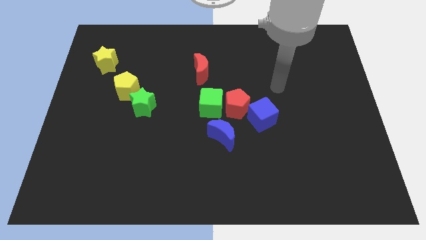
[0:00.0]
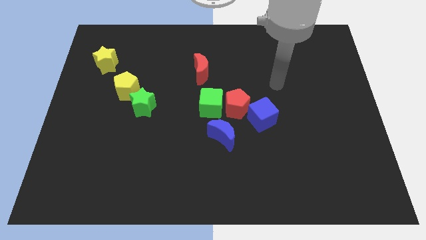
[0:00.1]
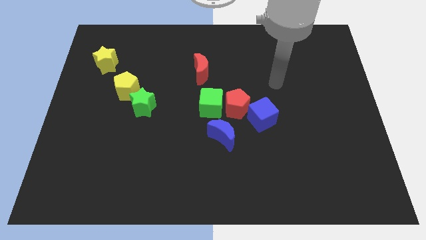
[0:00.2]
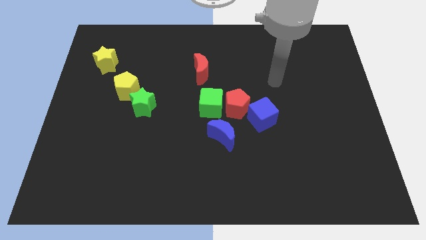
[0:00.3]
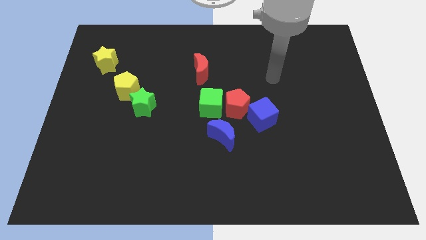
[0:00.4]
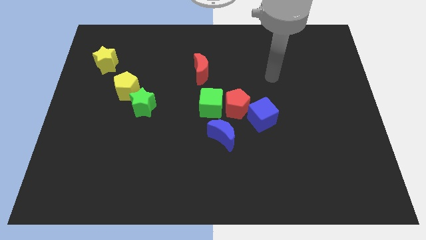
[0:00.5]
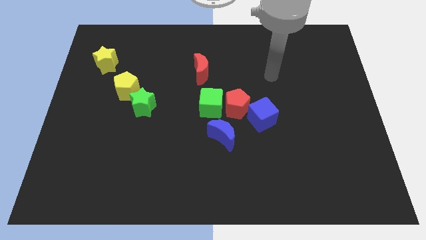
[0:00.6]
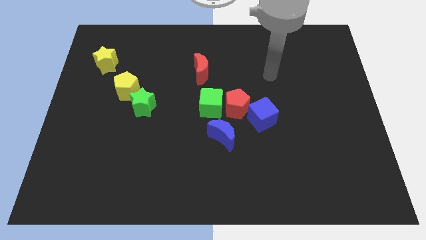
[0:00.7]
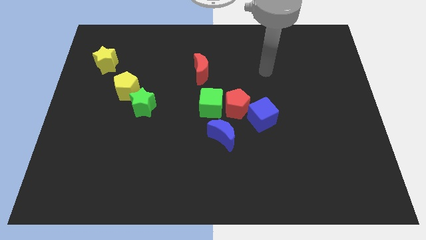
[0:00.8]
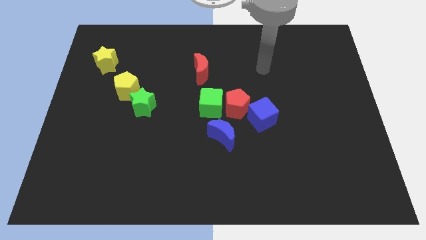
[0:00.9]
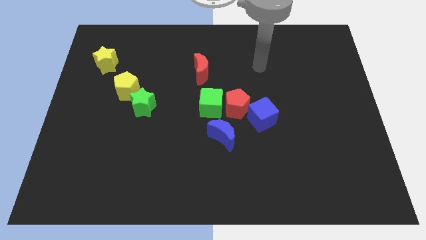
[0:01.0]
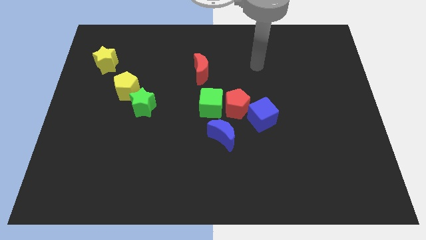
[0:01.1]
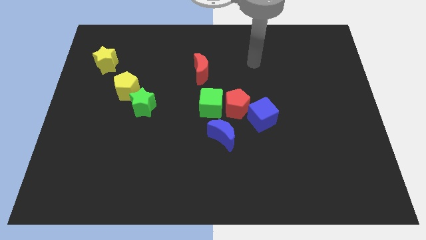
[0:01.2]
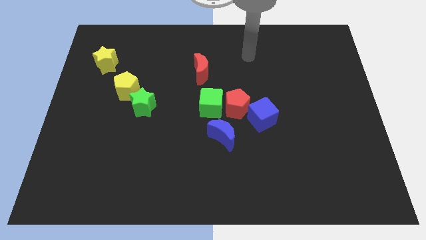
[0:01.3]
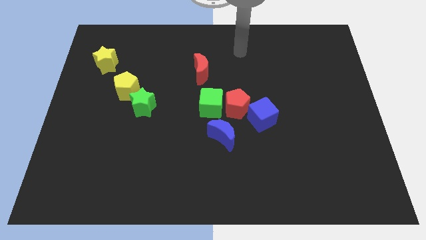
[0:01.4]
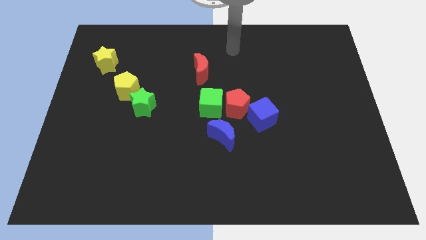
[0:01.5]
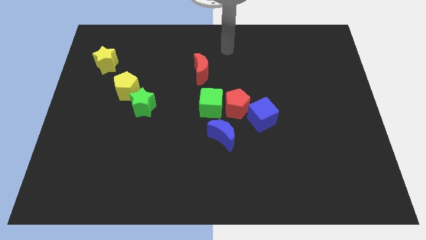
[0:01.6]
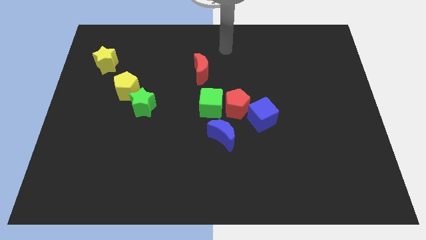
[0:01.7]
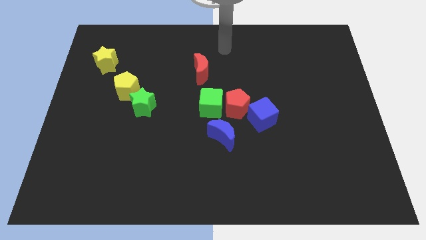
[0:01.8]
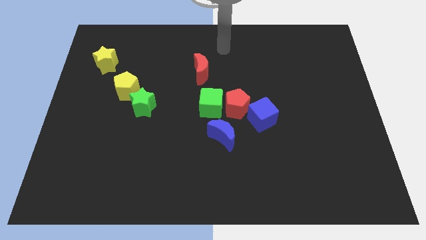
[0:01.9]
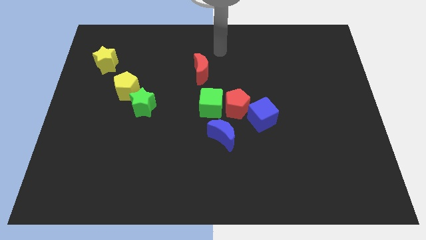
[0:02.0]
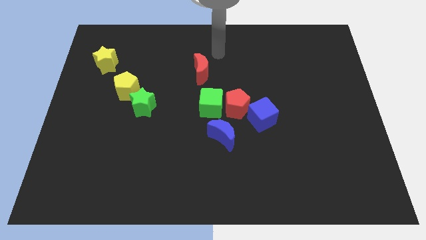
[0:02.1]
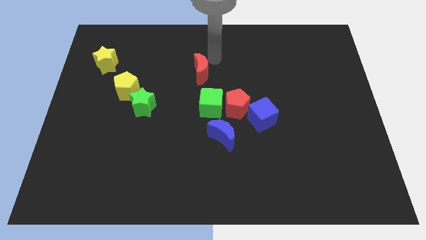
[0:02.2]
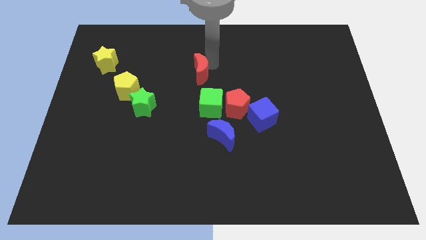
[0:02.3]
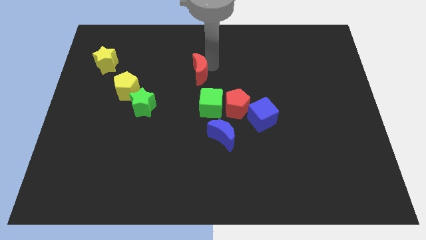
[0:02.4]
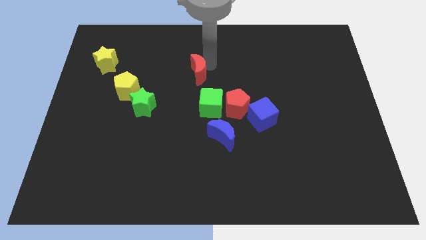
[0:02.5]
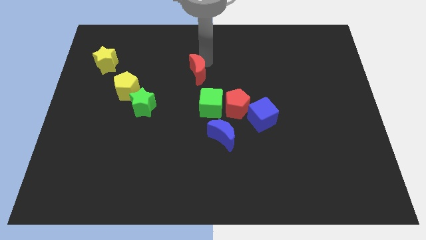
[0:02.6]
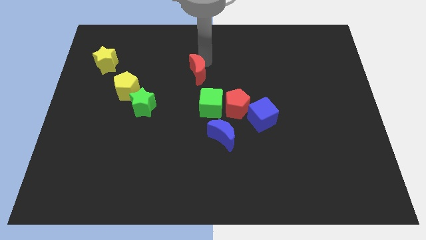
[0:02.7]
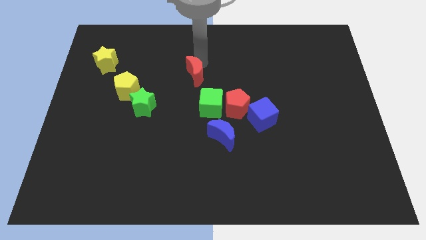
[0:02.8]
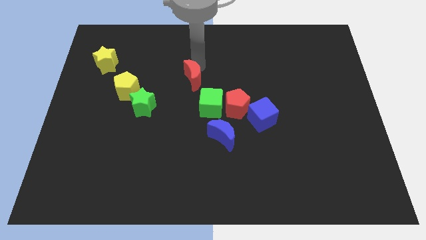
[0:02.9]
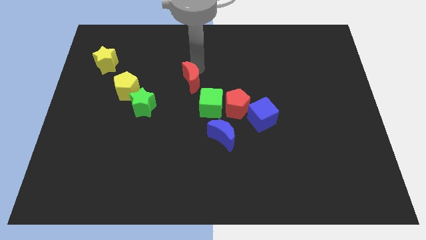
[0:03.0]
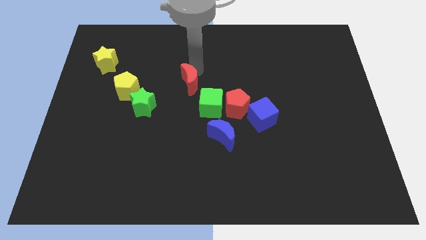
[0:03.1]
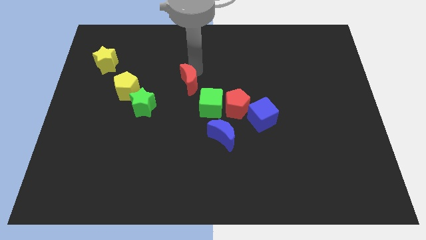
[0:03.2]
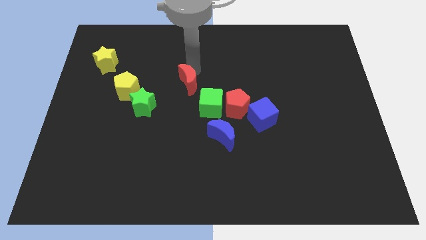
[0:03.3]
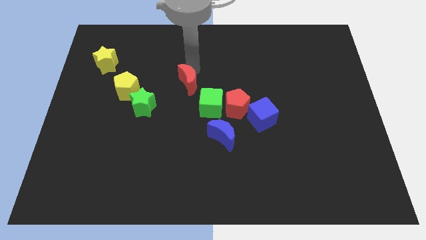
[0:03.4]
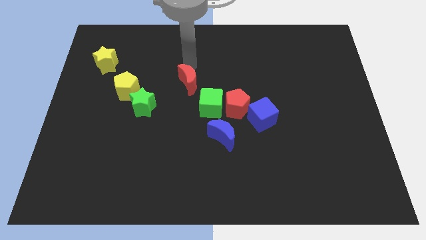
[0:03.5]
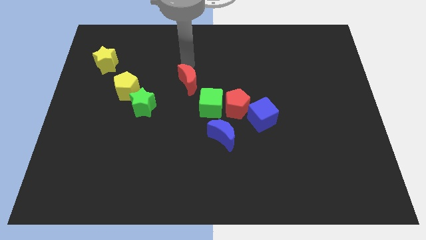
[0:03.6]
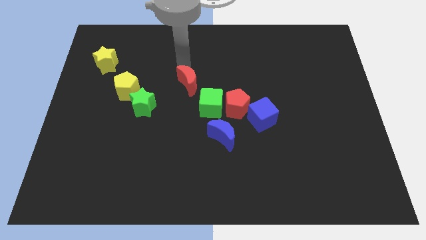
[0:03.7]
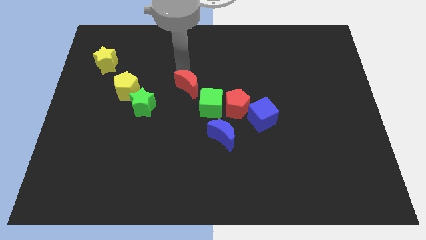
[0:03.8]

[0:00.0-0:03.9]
push the red moon close to the green cube

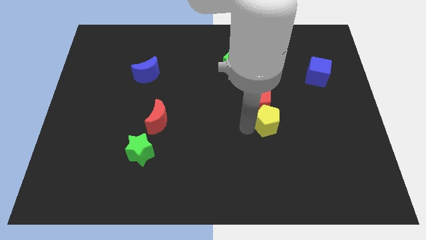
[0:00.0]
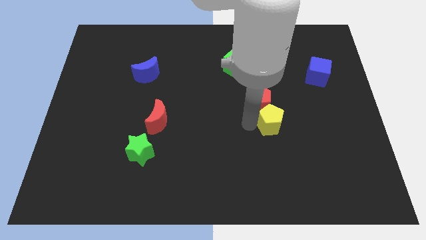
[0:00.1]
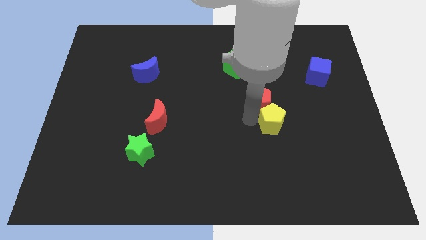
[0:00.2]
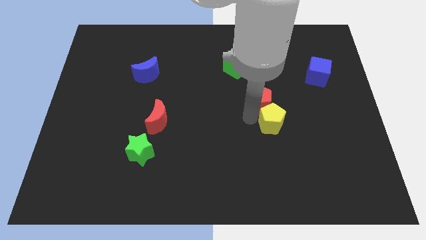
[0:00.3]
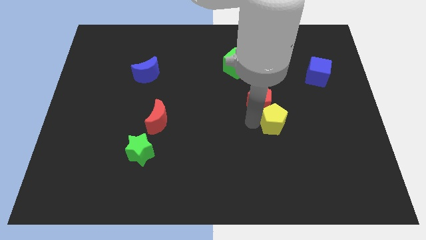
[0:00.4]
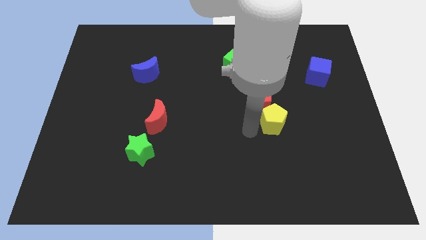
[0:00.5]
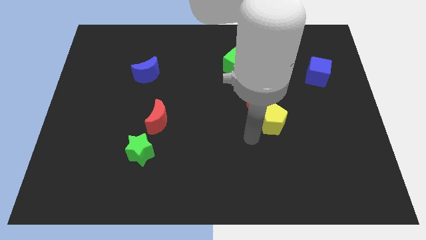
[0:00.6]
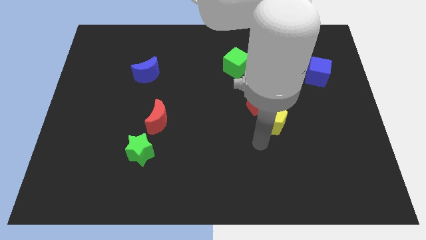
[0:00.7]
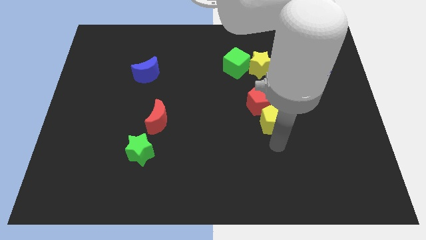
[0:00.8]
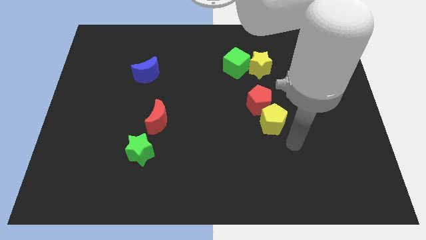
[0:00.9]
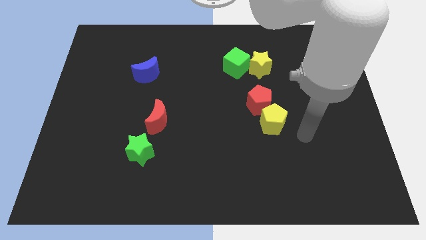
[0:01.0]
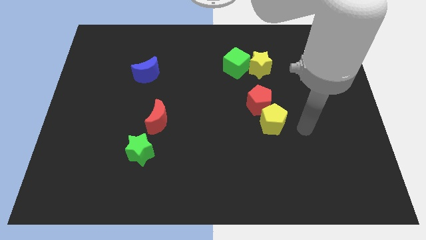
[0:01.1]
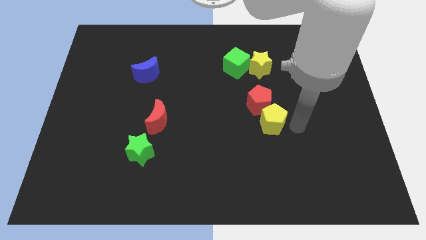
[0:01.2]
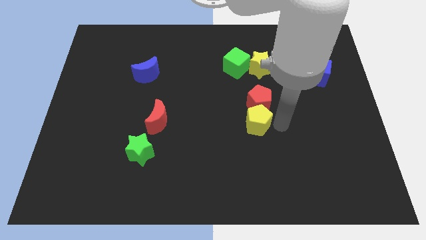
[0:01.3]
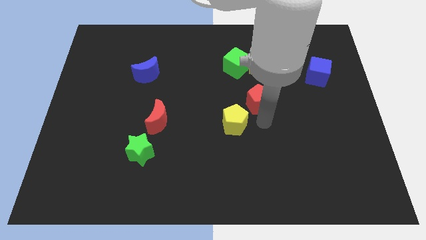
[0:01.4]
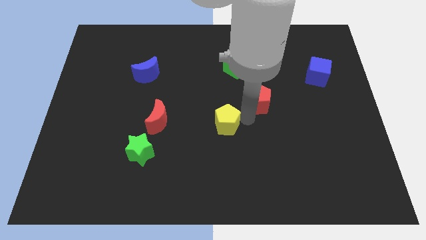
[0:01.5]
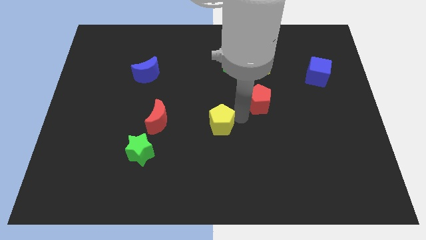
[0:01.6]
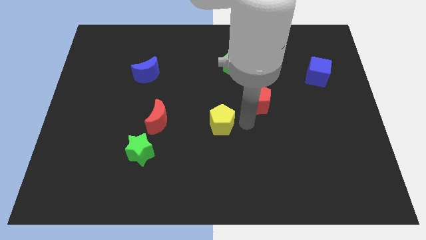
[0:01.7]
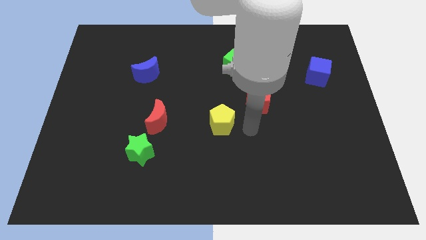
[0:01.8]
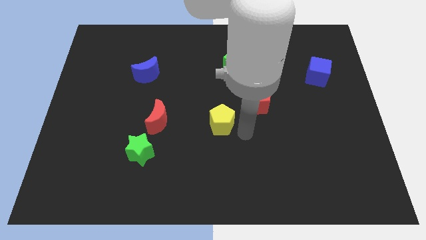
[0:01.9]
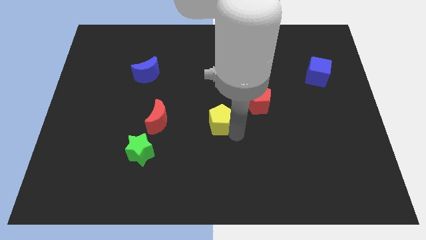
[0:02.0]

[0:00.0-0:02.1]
separate yellow pentagon from the red pentagon

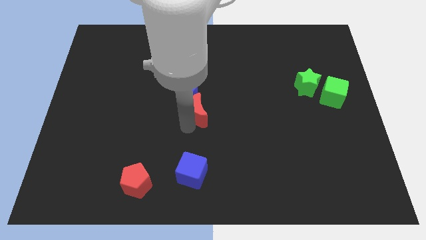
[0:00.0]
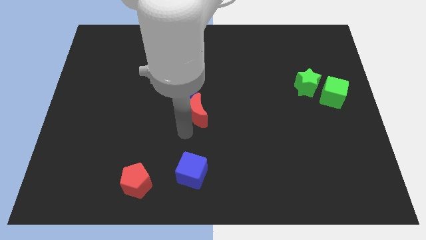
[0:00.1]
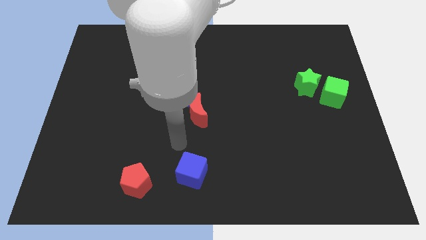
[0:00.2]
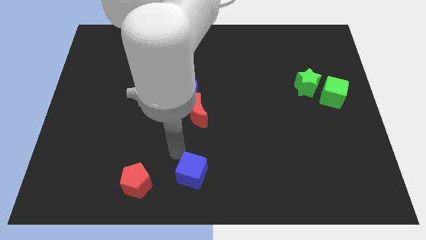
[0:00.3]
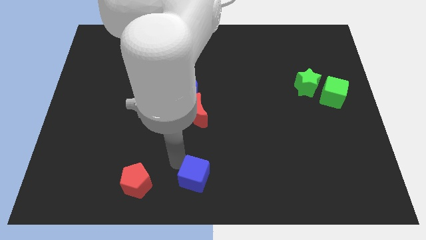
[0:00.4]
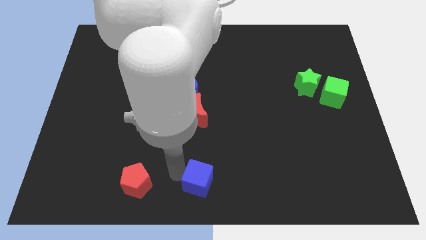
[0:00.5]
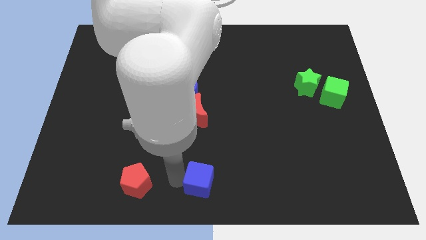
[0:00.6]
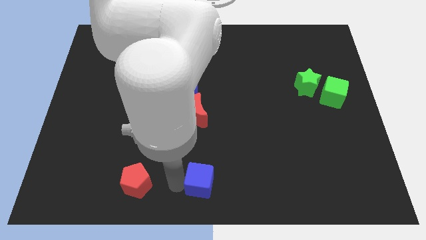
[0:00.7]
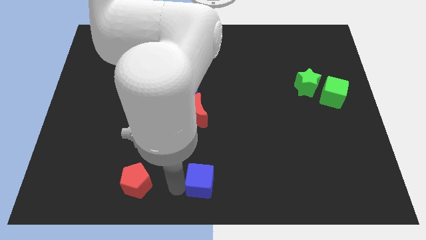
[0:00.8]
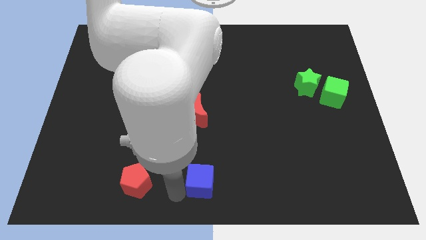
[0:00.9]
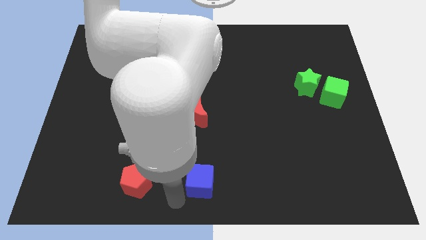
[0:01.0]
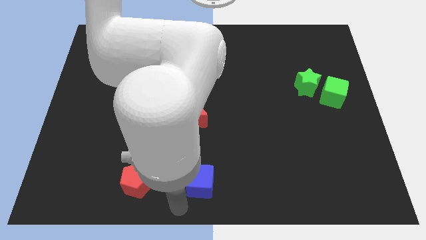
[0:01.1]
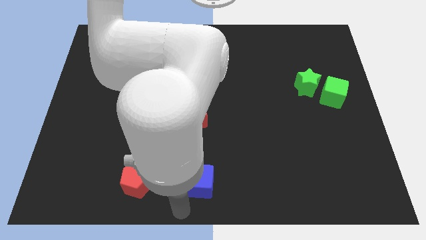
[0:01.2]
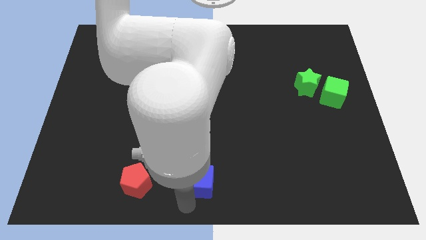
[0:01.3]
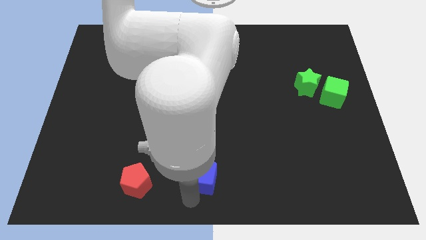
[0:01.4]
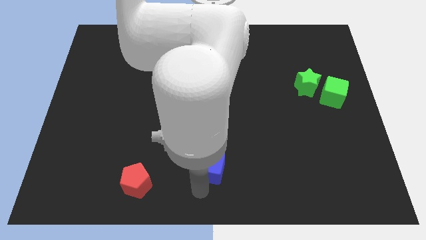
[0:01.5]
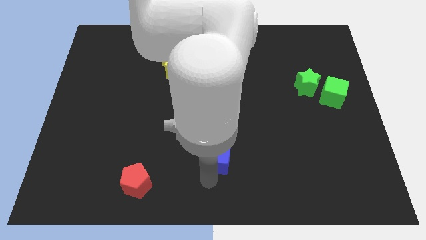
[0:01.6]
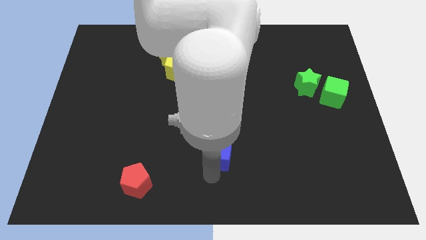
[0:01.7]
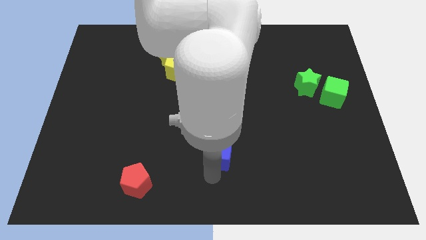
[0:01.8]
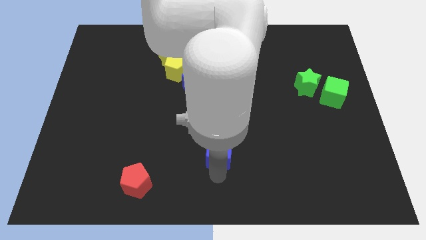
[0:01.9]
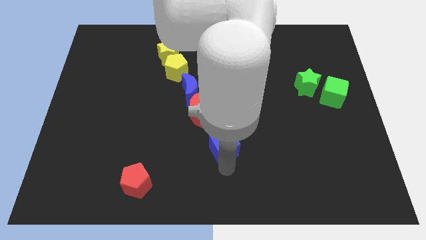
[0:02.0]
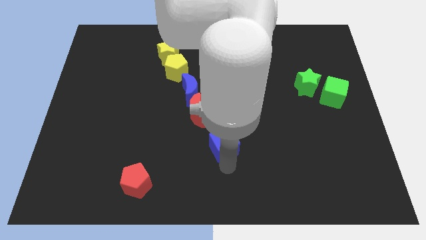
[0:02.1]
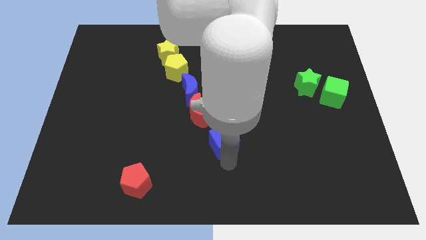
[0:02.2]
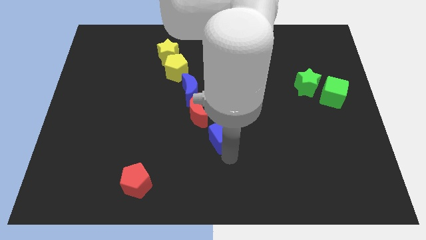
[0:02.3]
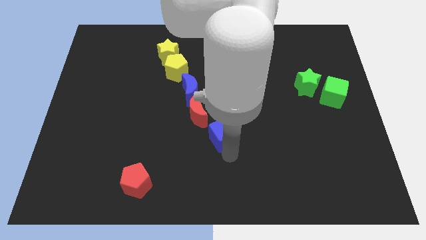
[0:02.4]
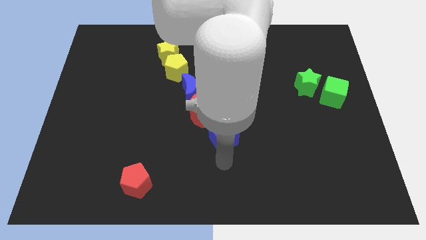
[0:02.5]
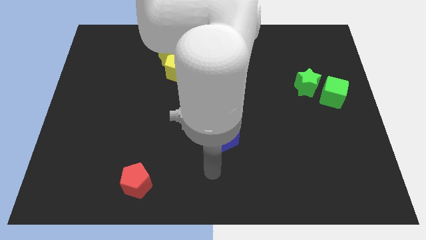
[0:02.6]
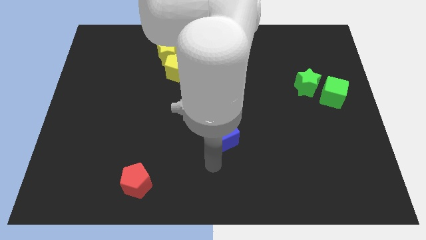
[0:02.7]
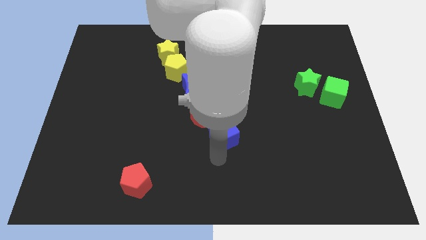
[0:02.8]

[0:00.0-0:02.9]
move the blue cube diagonally to the green star
